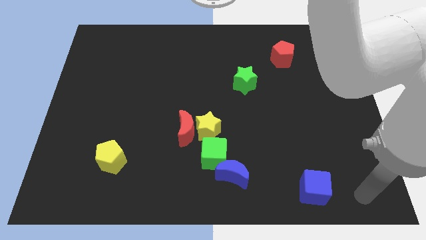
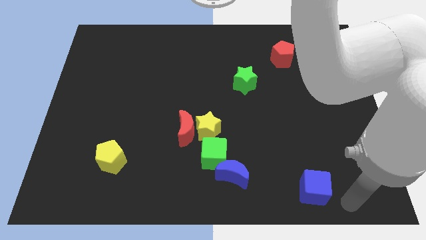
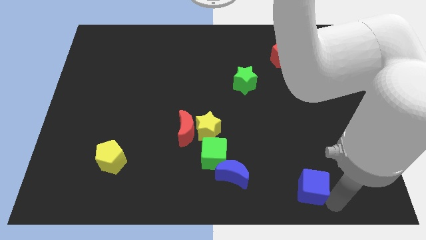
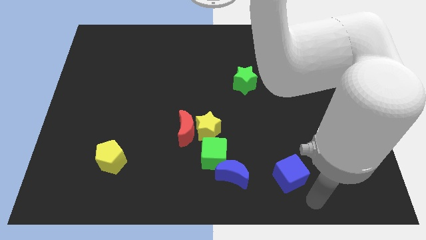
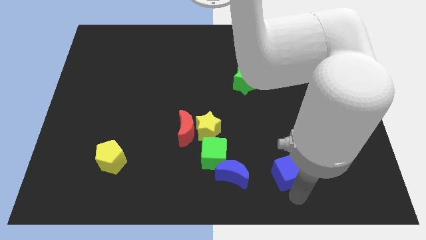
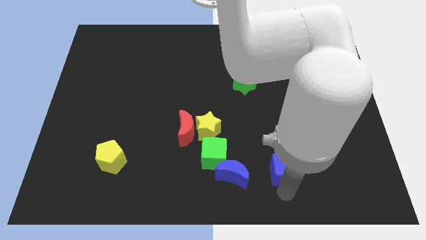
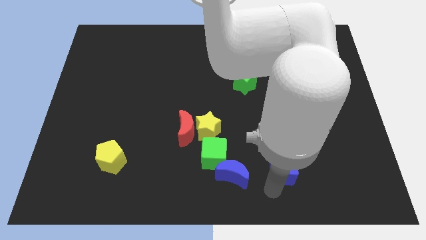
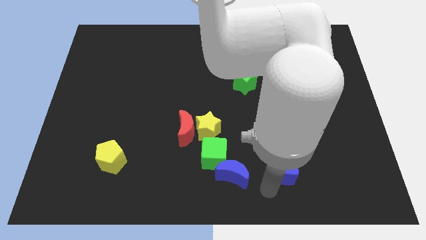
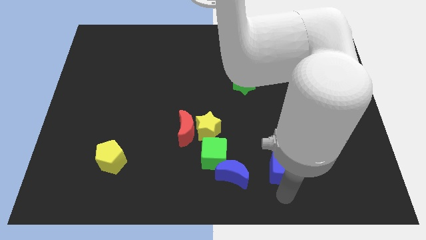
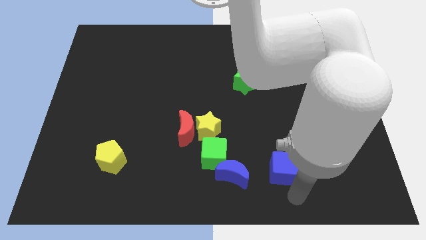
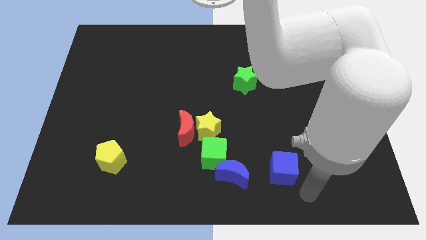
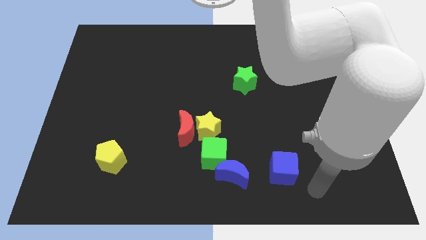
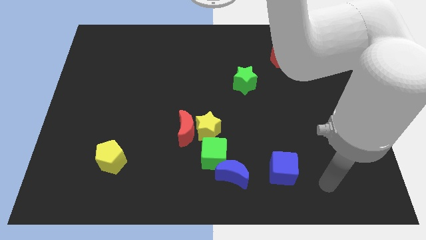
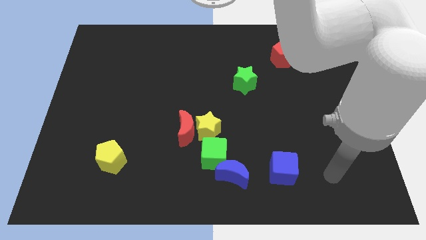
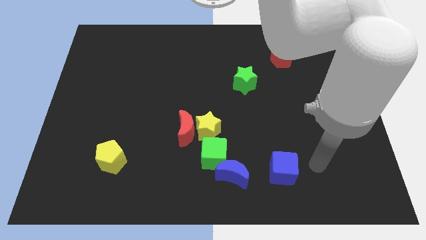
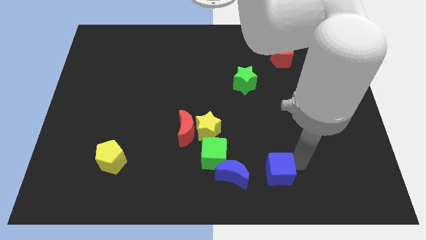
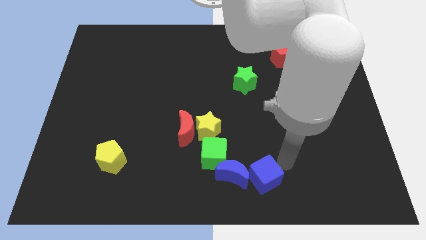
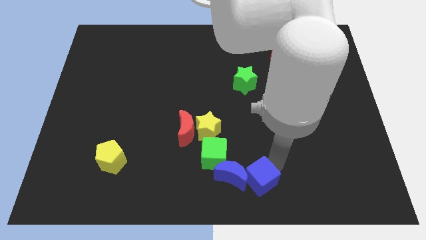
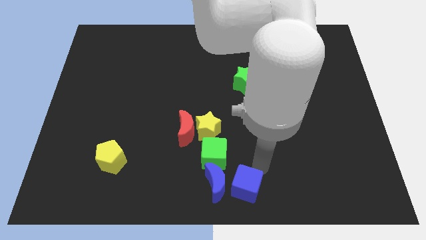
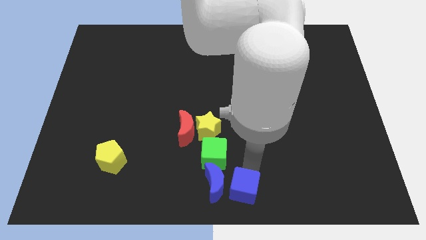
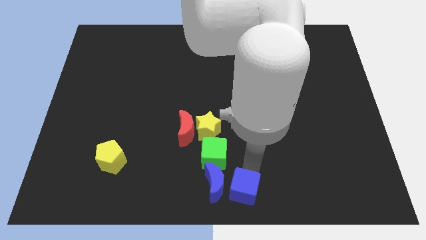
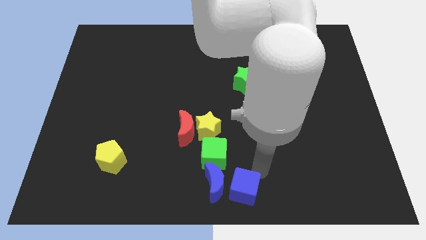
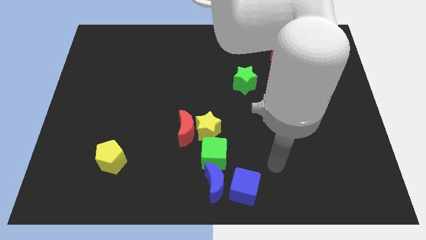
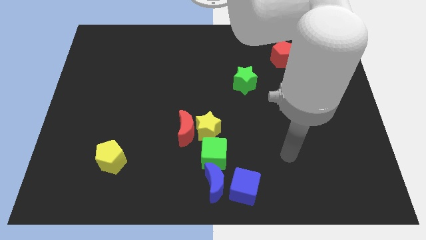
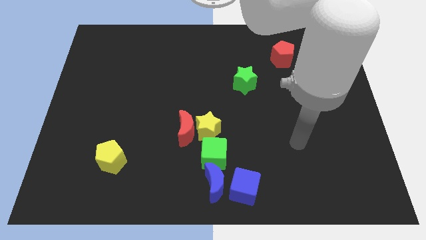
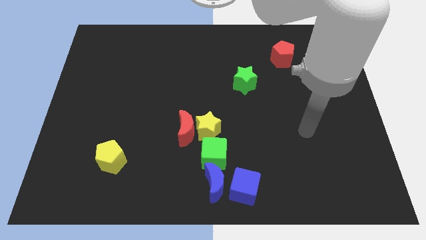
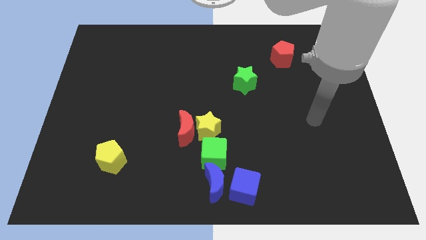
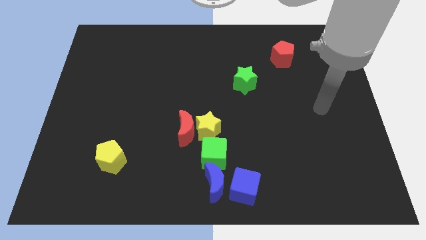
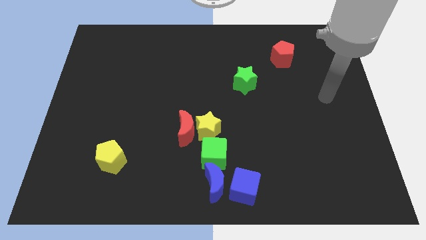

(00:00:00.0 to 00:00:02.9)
put the blue cube beside the blue crescent

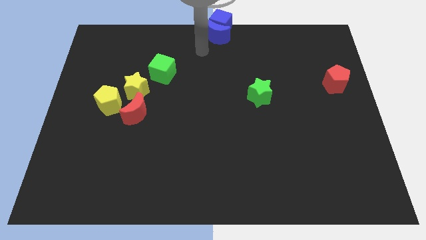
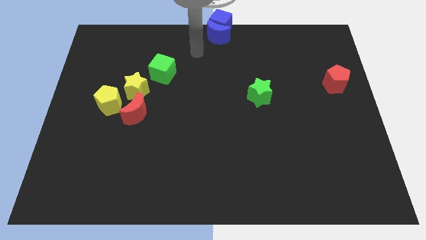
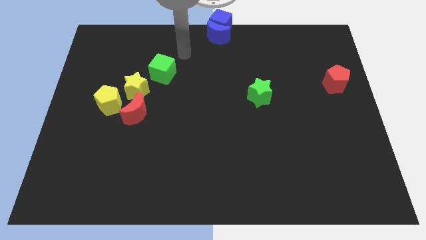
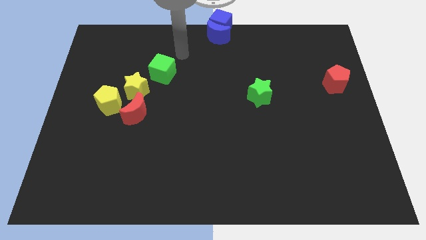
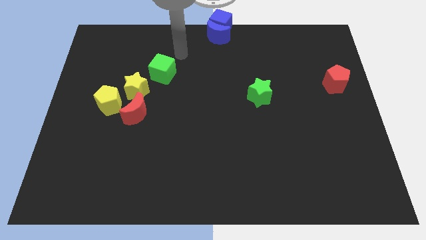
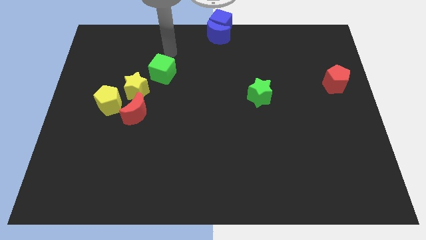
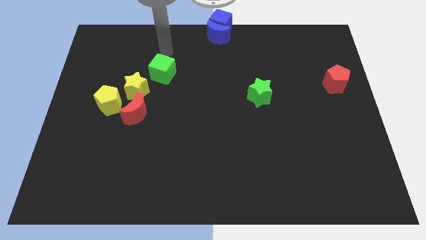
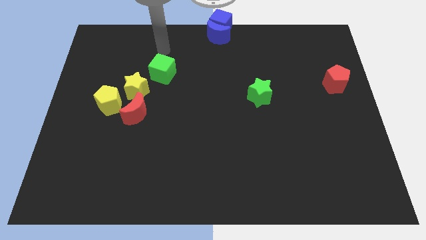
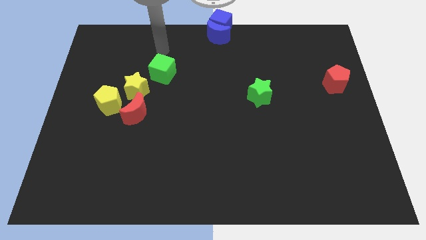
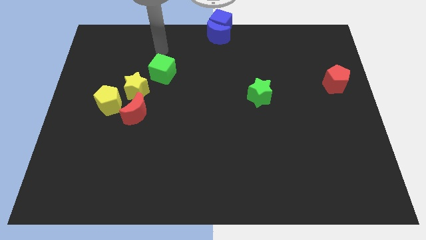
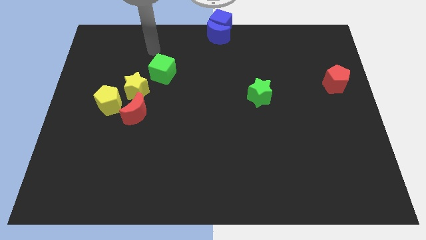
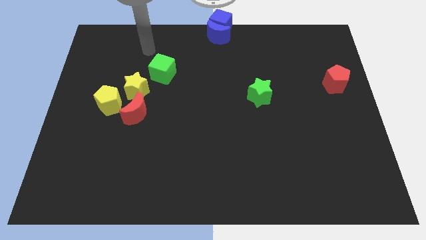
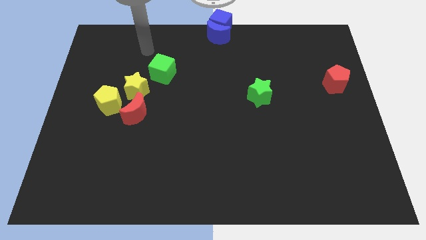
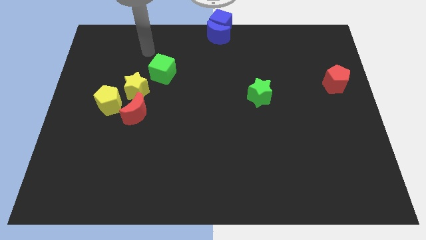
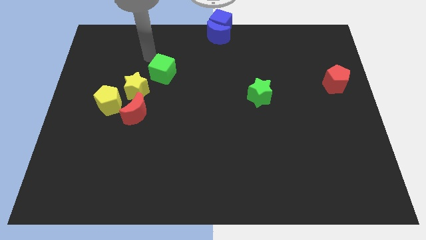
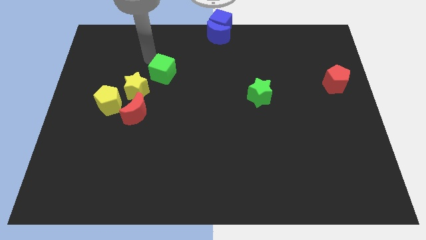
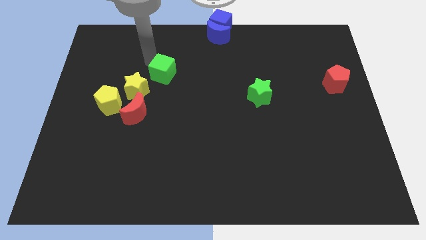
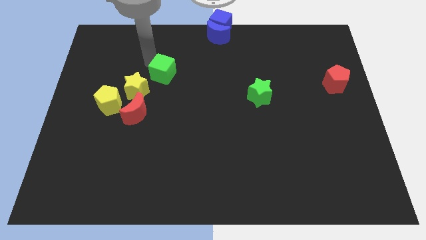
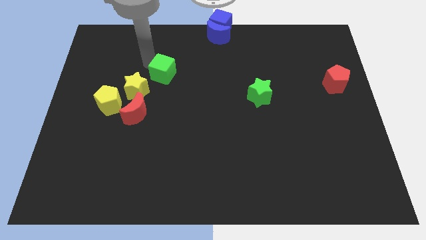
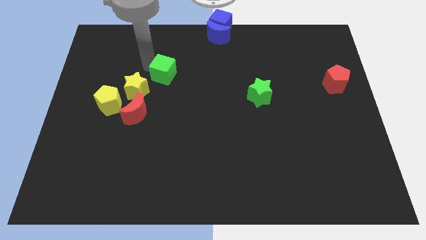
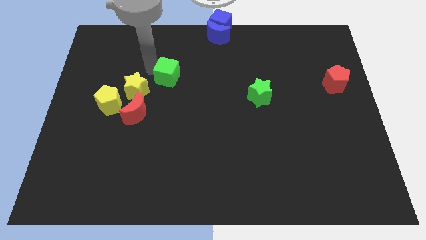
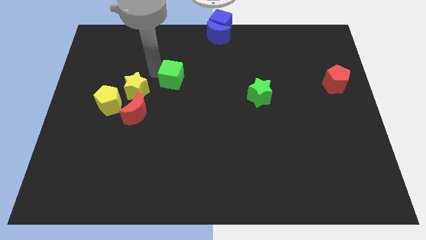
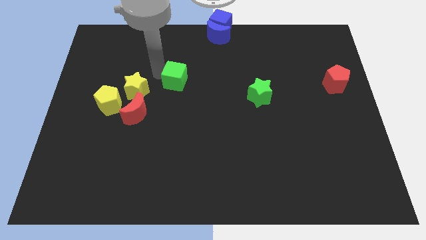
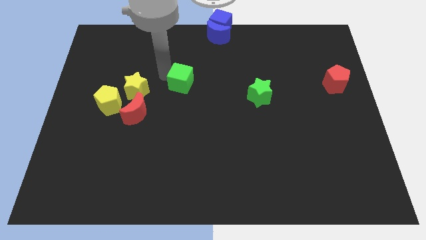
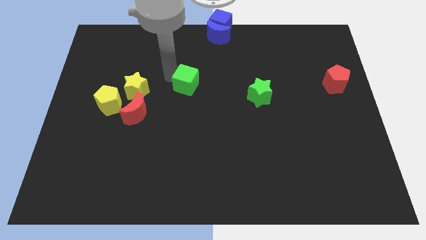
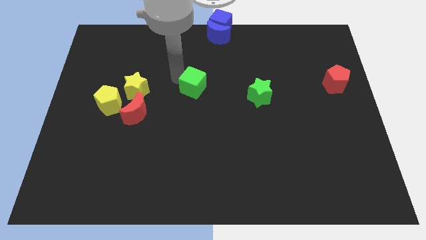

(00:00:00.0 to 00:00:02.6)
move the green cube towards green star

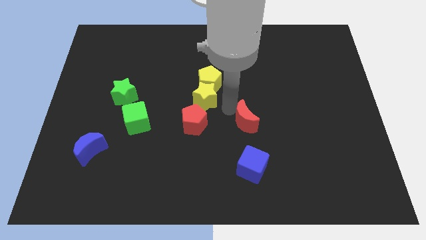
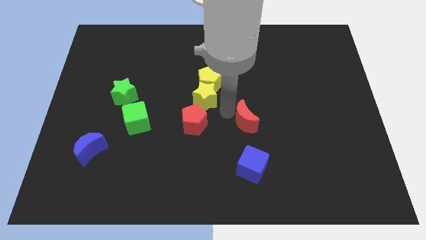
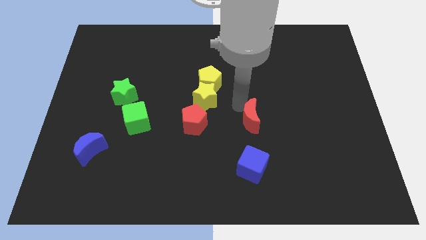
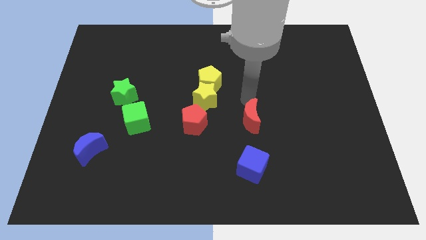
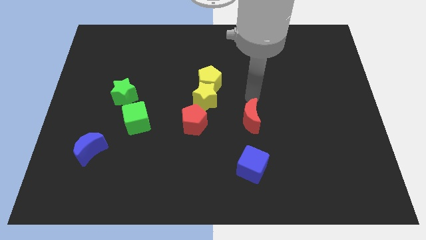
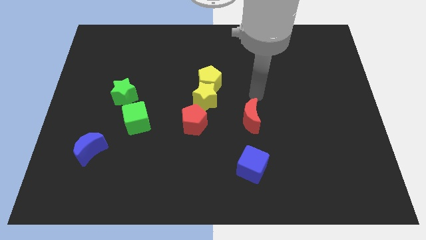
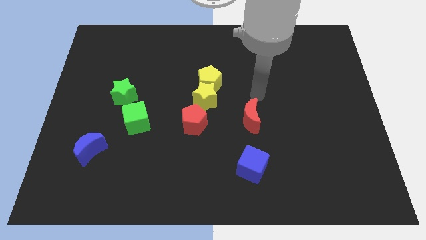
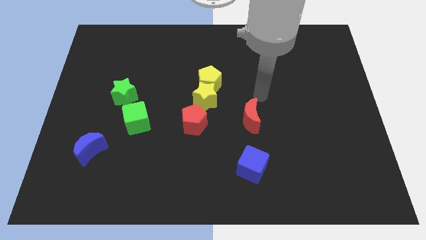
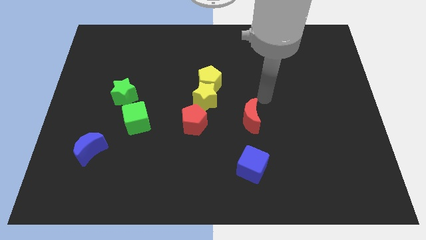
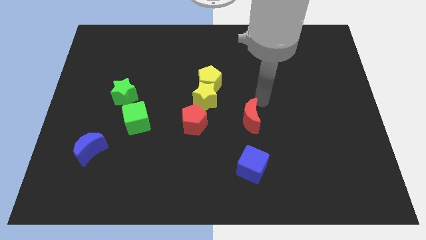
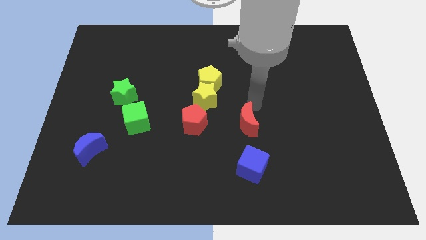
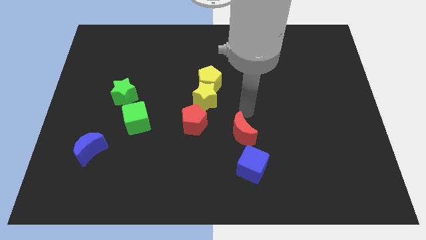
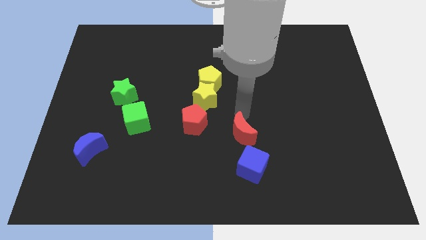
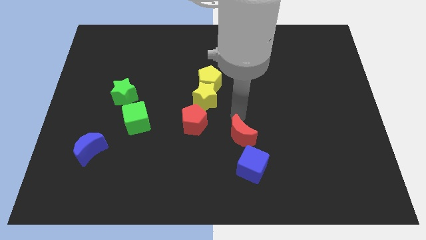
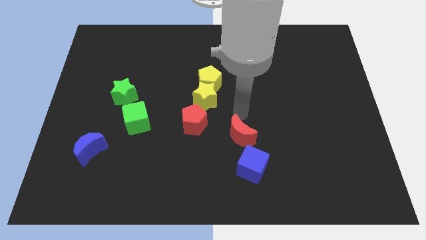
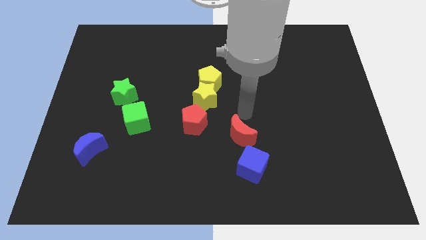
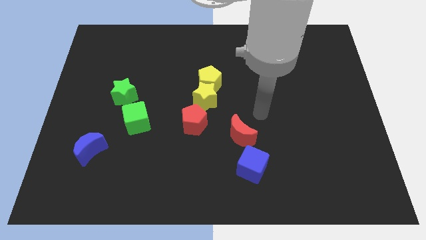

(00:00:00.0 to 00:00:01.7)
place red moon at the top left of the blue cube

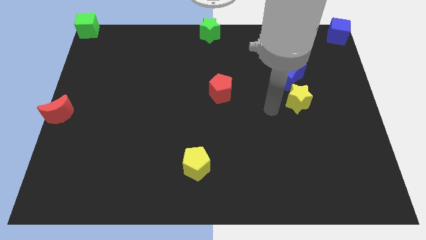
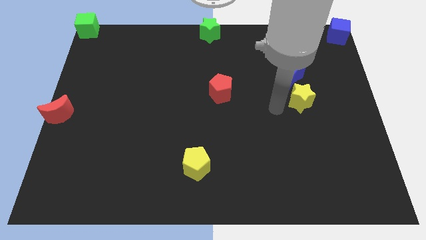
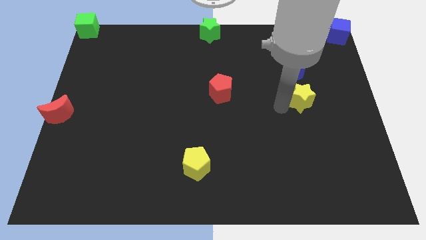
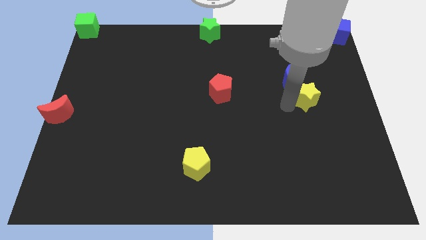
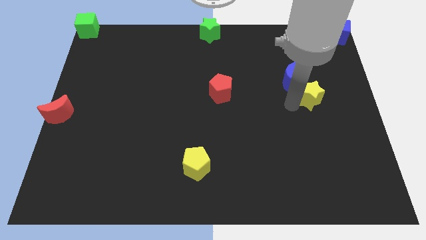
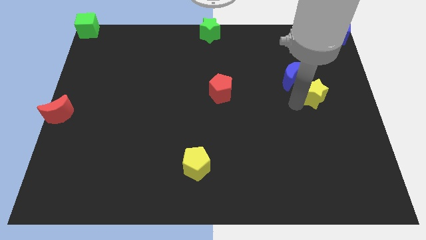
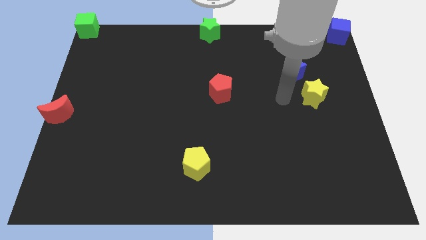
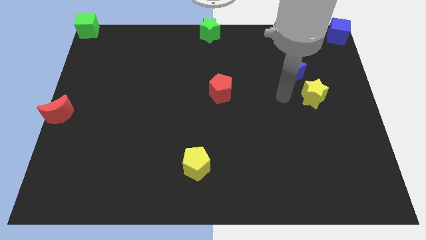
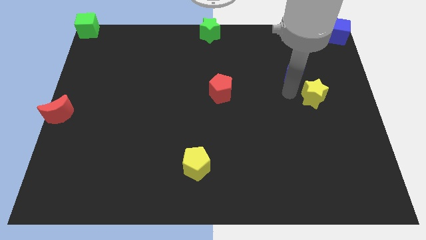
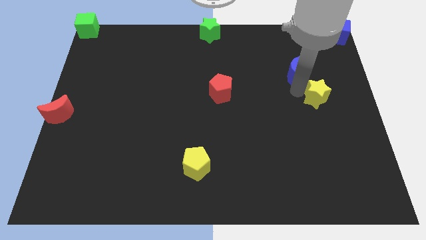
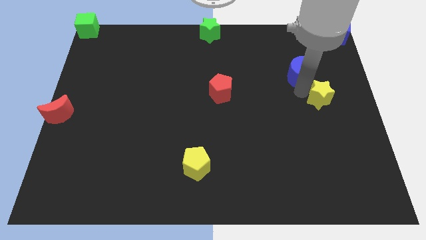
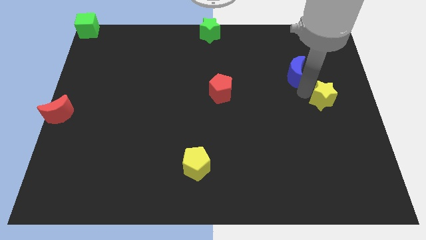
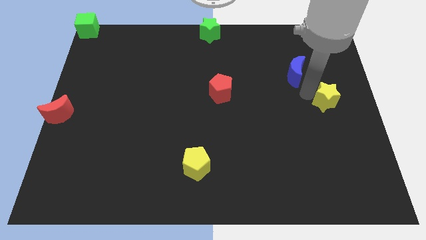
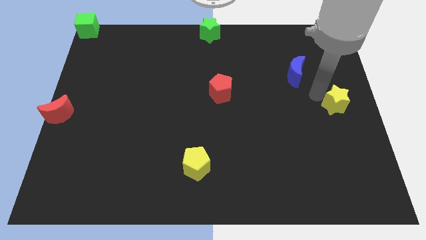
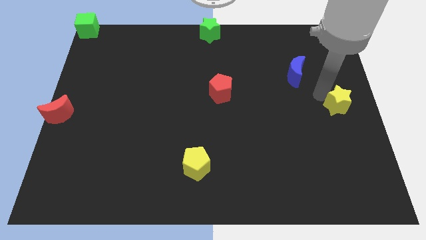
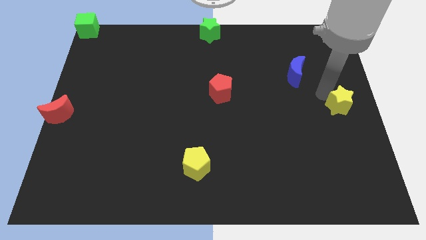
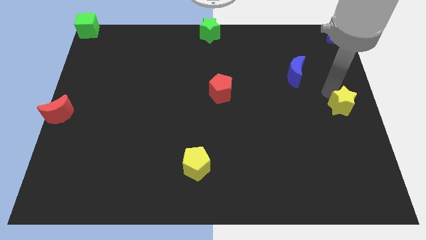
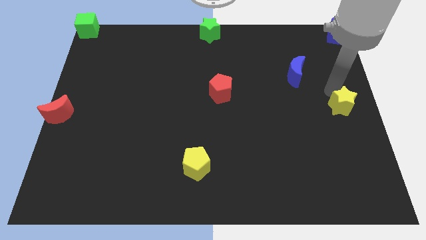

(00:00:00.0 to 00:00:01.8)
move the yellow star to the center right of the board
